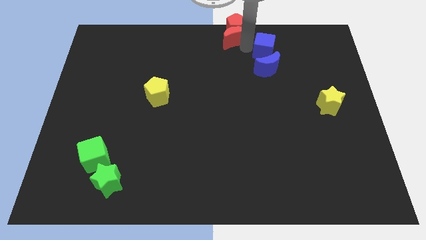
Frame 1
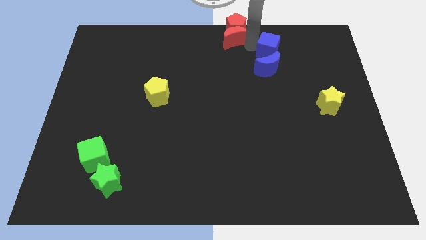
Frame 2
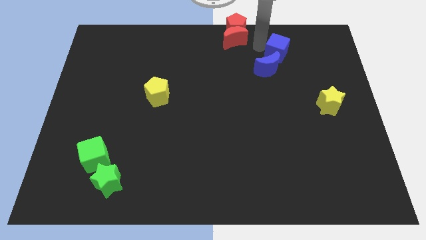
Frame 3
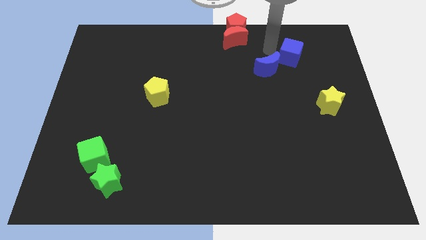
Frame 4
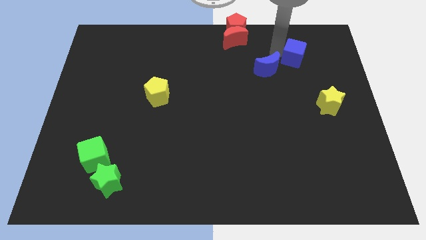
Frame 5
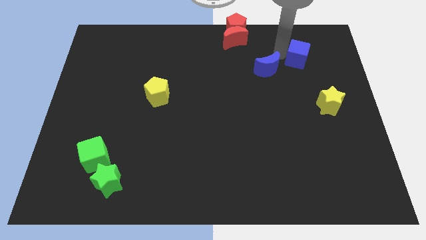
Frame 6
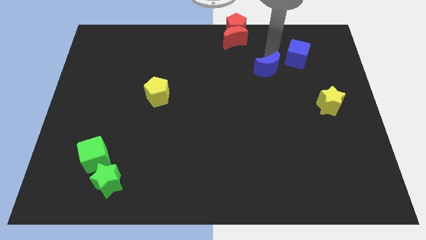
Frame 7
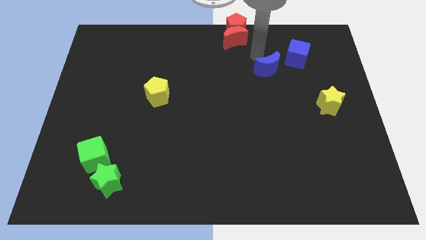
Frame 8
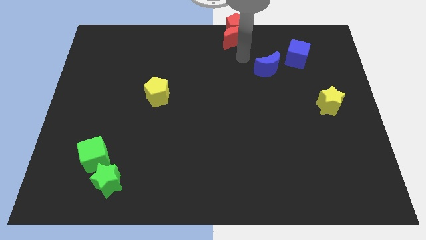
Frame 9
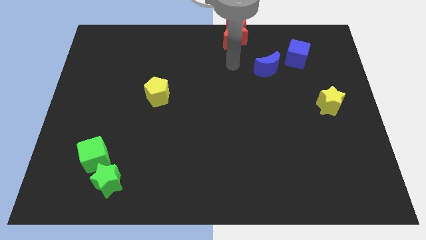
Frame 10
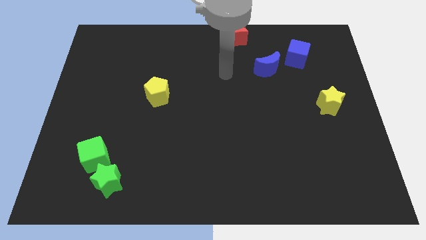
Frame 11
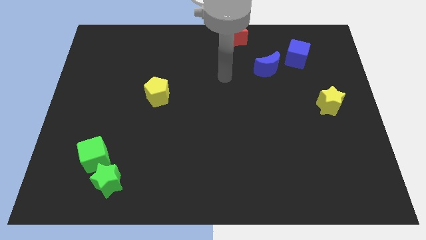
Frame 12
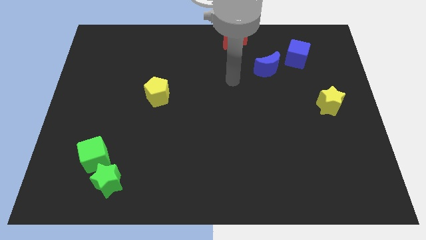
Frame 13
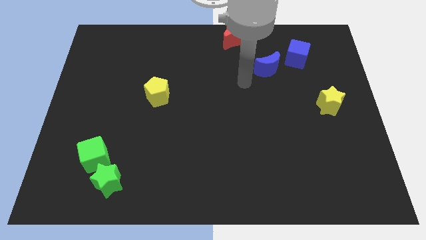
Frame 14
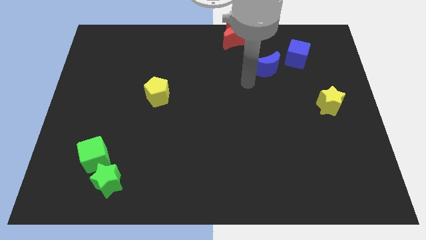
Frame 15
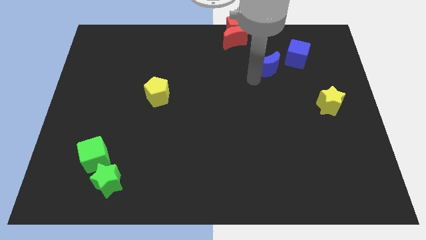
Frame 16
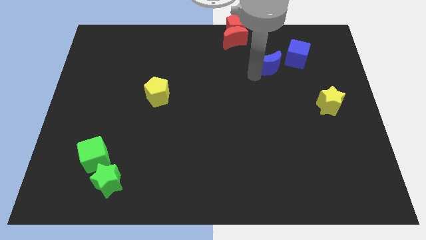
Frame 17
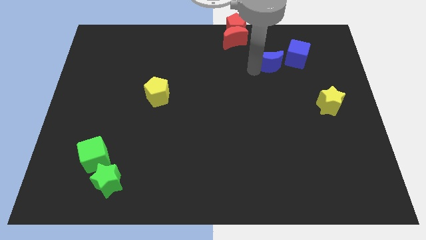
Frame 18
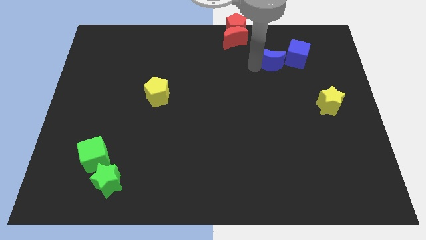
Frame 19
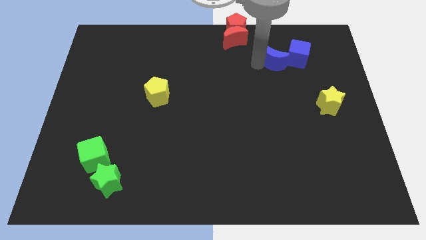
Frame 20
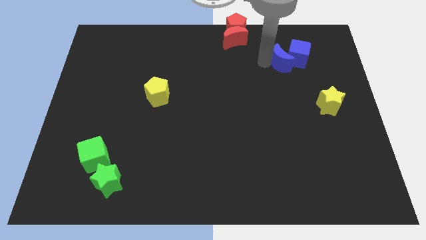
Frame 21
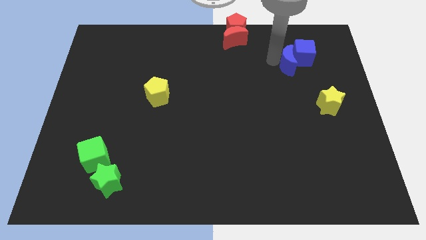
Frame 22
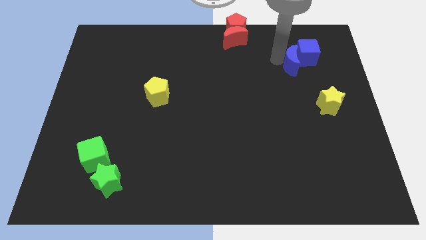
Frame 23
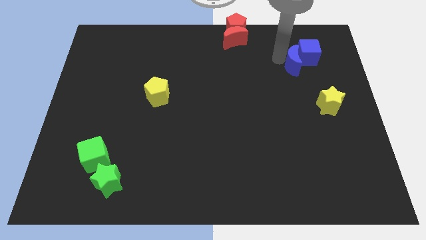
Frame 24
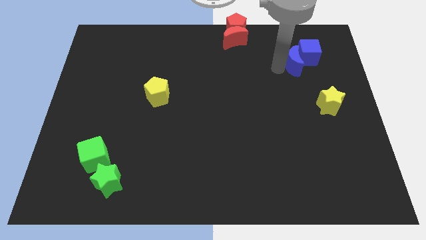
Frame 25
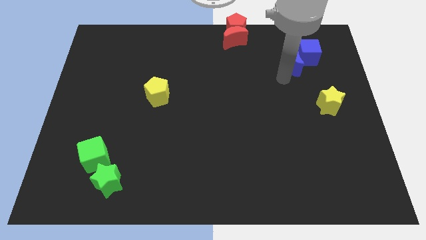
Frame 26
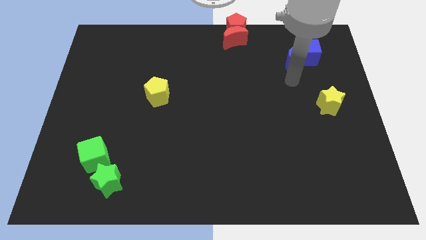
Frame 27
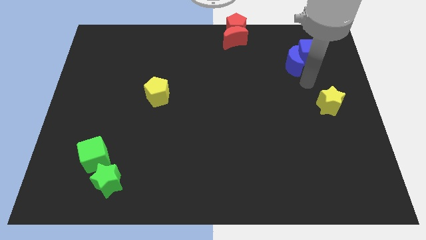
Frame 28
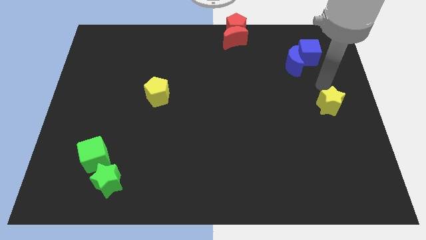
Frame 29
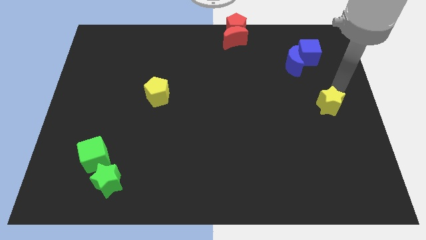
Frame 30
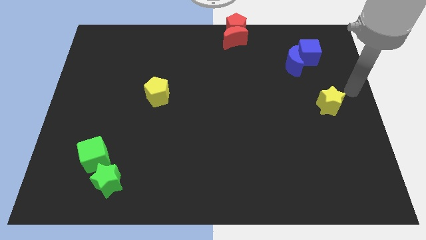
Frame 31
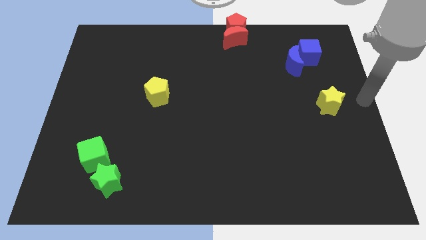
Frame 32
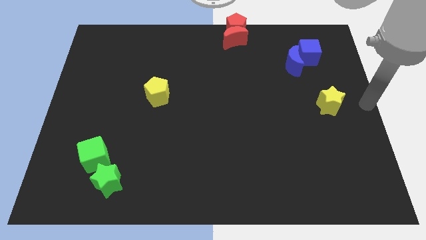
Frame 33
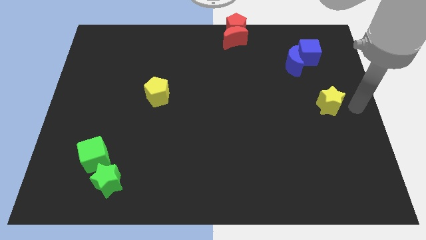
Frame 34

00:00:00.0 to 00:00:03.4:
move the blue moon into the blue cube

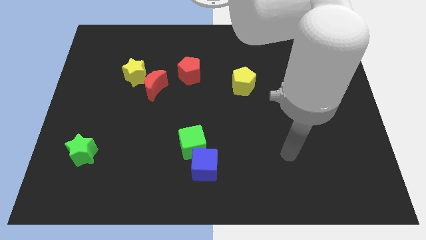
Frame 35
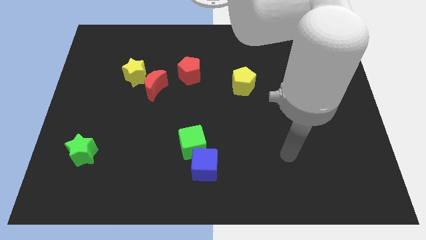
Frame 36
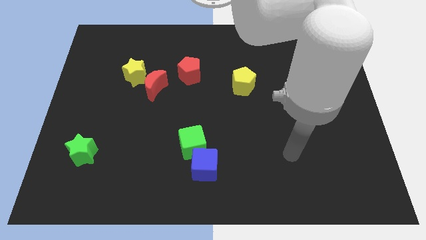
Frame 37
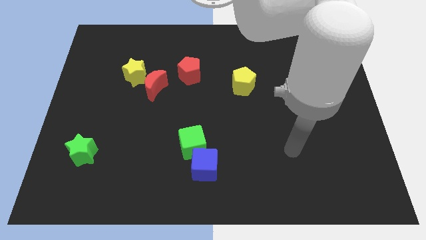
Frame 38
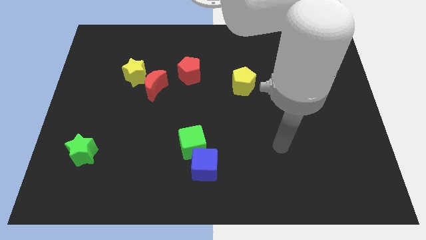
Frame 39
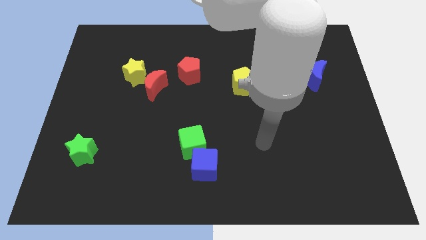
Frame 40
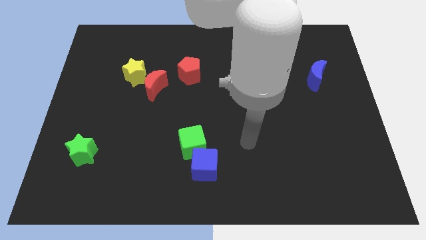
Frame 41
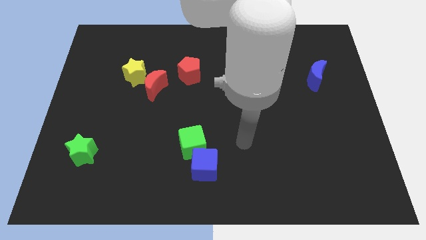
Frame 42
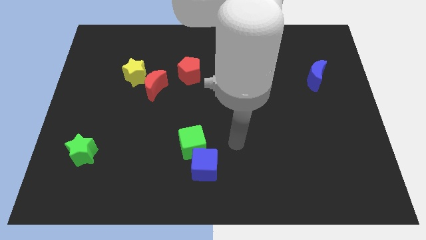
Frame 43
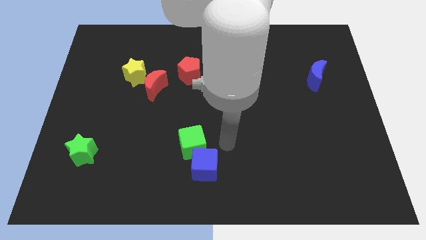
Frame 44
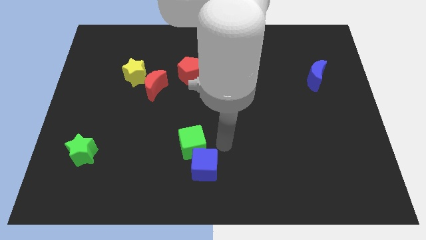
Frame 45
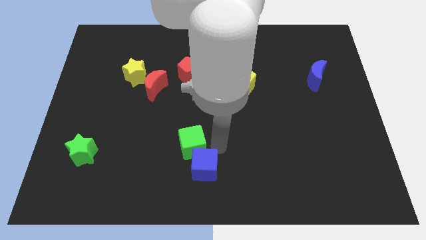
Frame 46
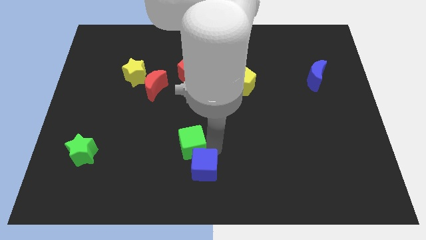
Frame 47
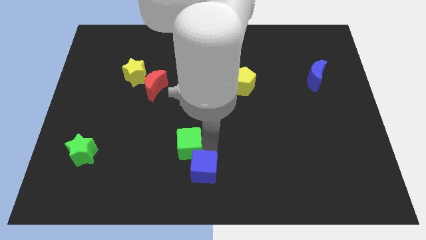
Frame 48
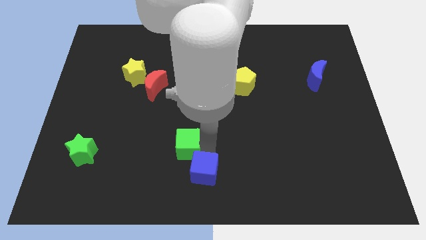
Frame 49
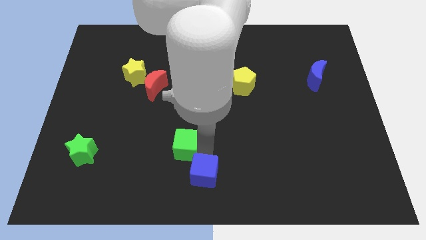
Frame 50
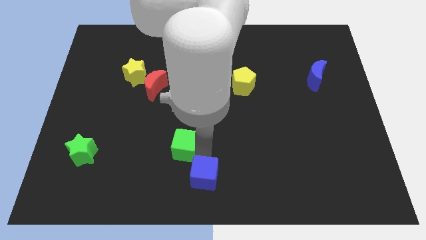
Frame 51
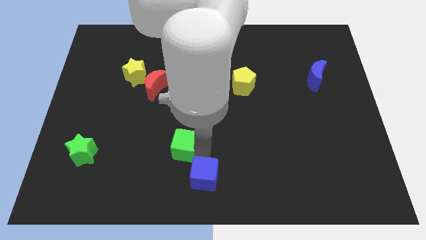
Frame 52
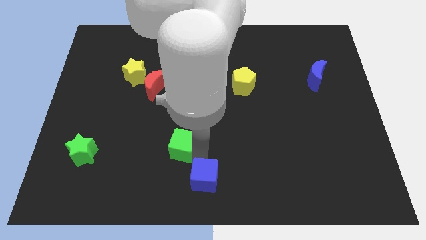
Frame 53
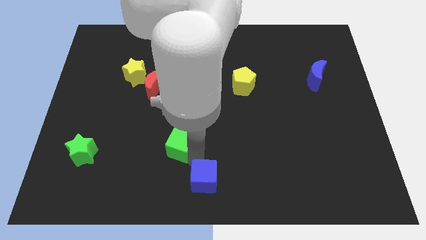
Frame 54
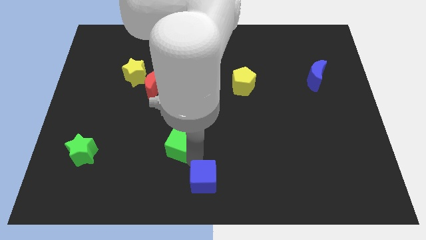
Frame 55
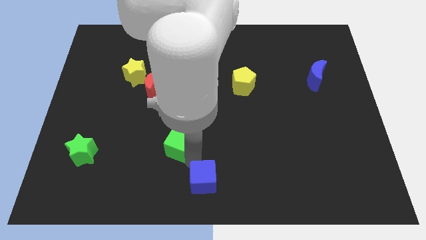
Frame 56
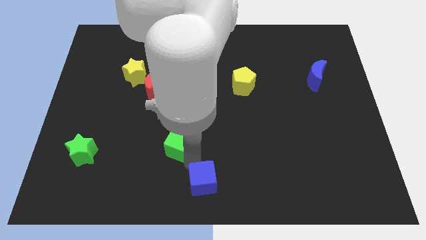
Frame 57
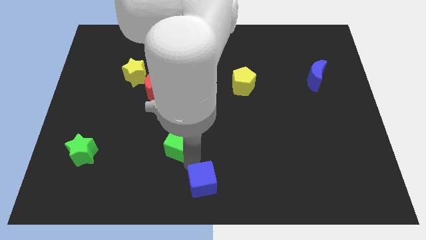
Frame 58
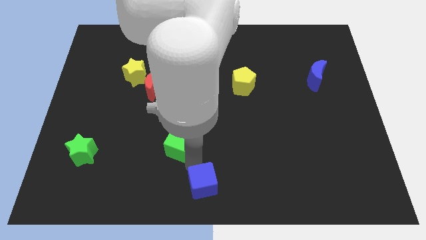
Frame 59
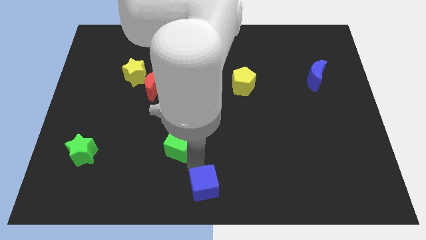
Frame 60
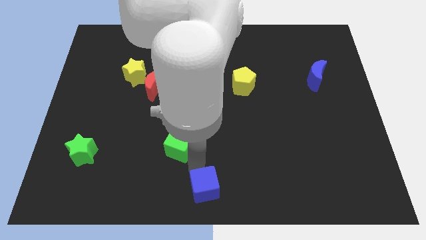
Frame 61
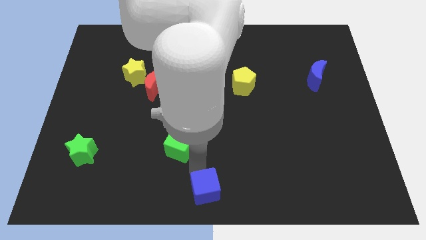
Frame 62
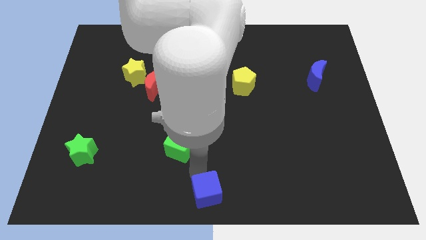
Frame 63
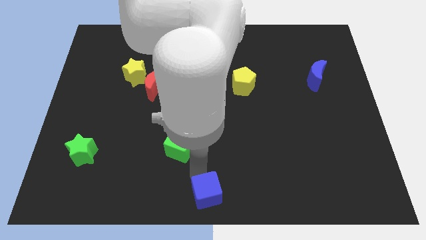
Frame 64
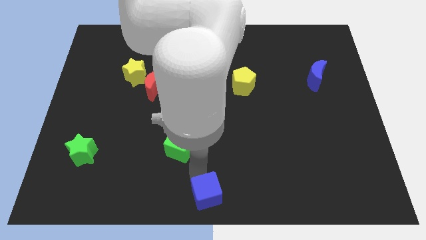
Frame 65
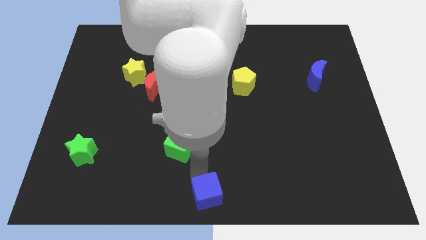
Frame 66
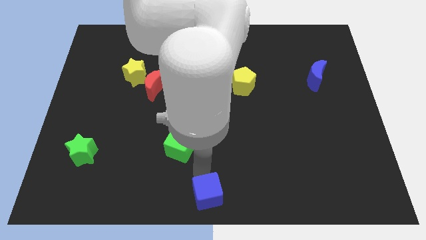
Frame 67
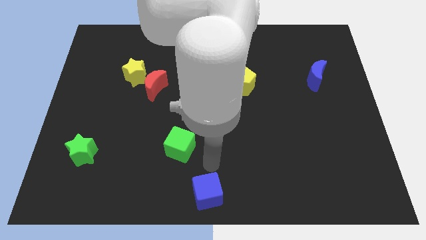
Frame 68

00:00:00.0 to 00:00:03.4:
move the blue cube to the bottom center of the board

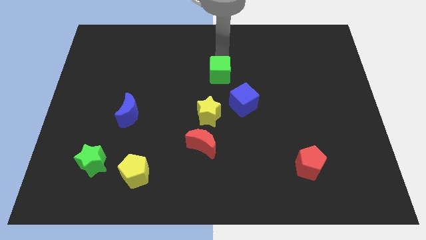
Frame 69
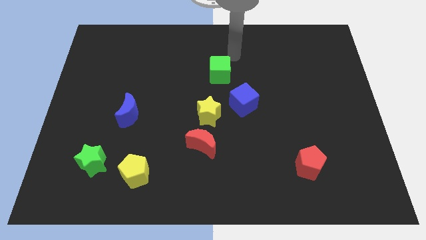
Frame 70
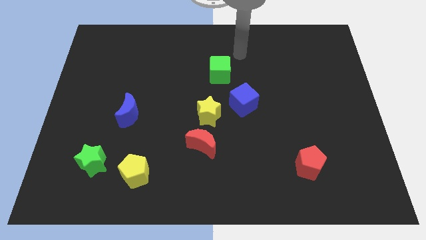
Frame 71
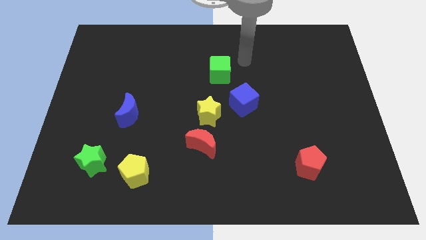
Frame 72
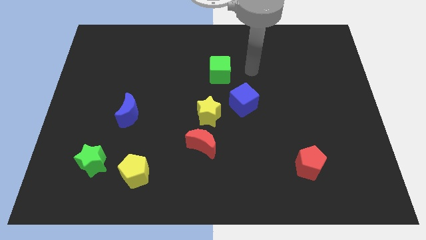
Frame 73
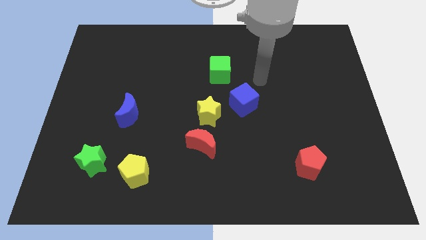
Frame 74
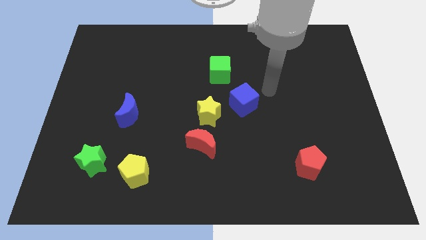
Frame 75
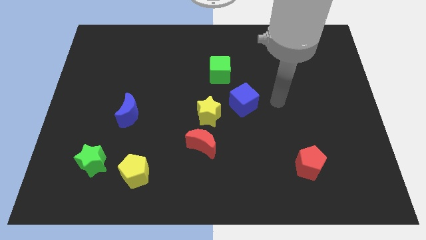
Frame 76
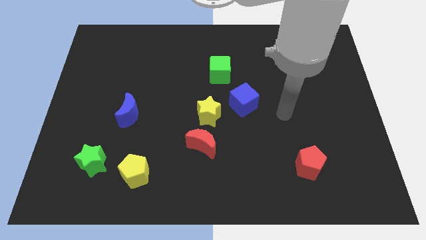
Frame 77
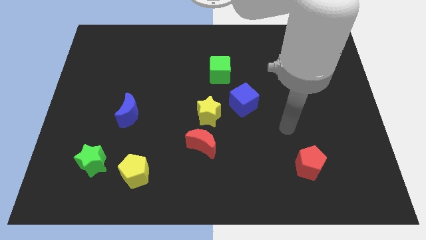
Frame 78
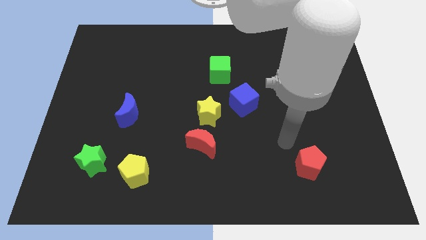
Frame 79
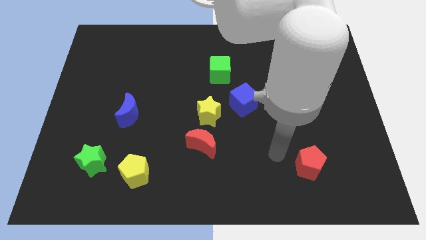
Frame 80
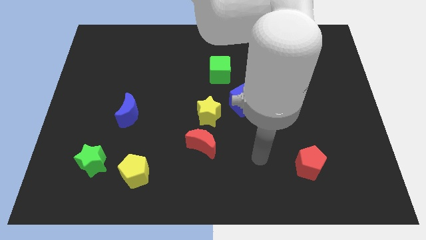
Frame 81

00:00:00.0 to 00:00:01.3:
move your hand away from the green block

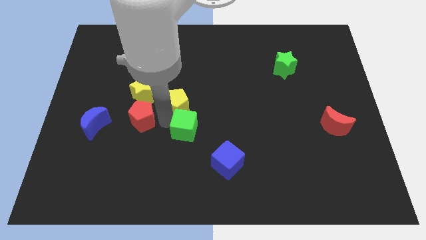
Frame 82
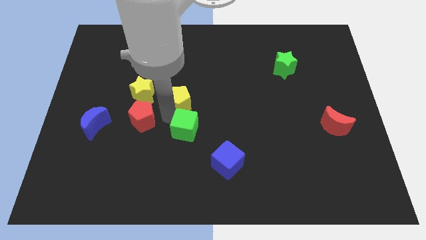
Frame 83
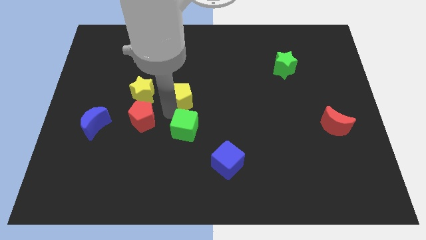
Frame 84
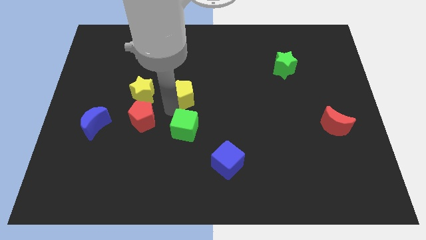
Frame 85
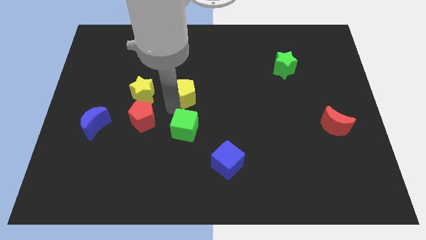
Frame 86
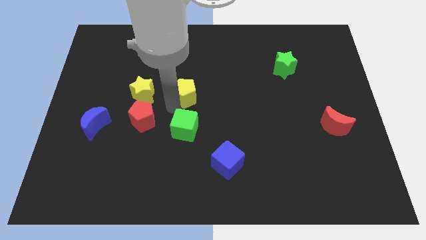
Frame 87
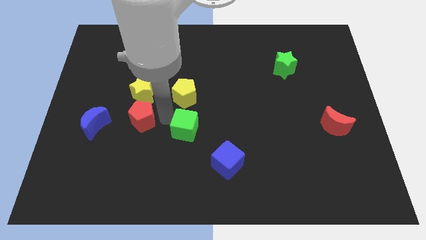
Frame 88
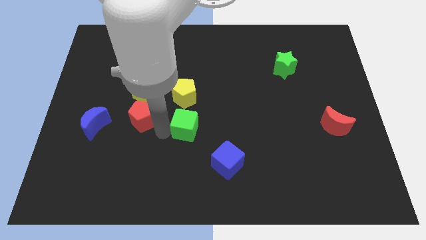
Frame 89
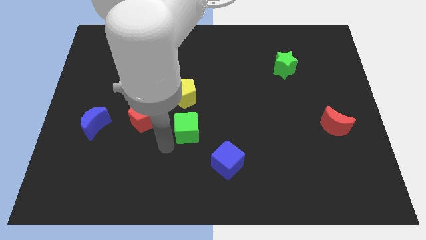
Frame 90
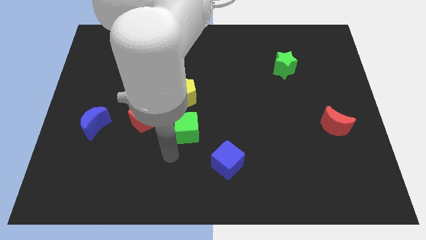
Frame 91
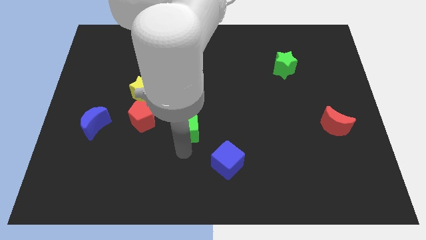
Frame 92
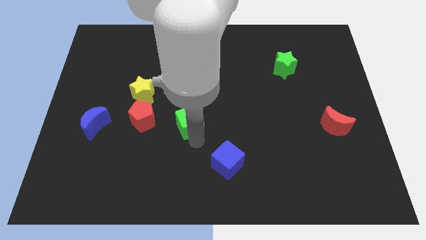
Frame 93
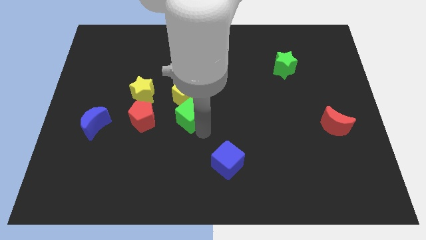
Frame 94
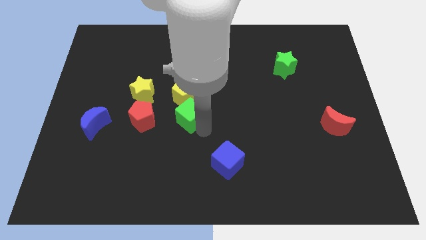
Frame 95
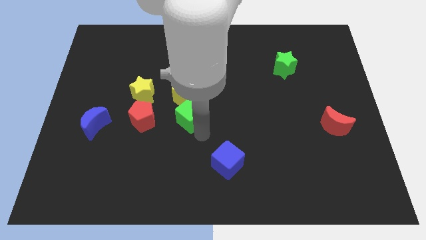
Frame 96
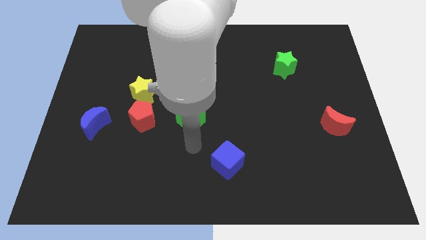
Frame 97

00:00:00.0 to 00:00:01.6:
push the yellow pentagon slightly upwards
